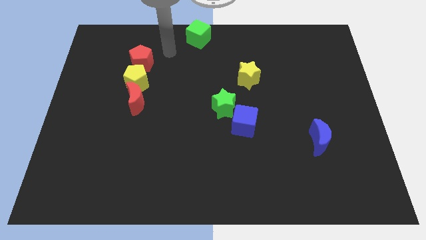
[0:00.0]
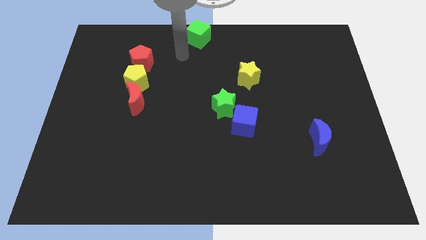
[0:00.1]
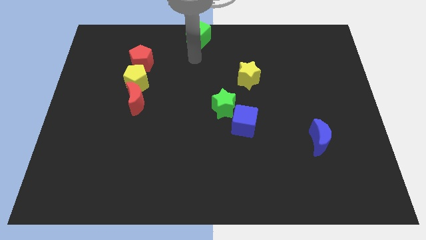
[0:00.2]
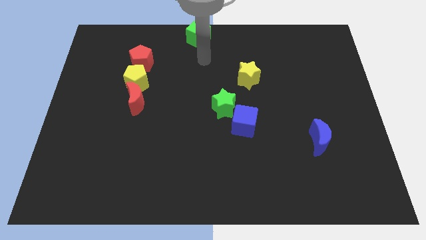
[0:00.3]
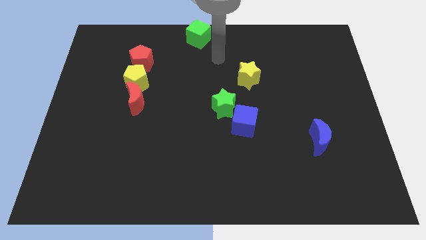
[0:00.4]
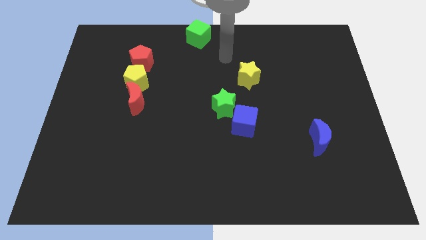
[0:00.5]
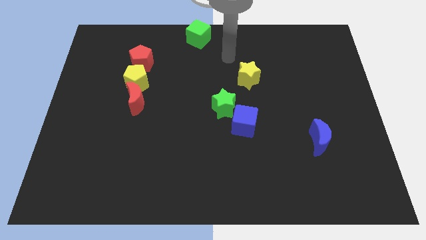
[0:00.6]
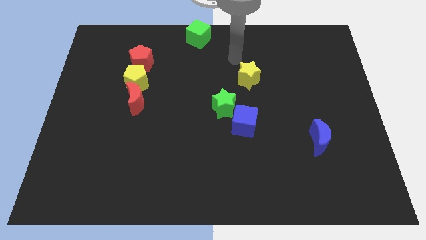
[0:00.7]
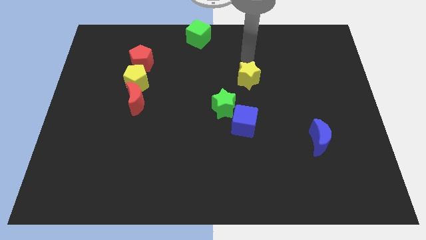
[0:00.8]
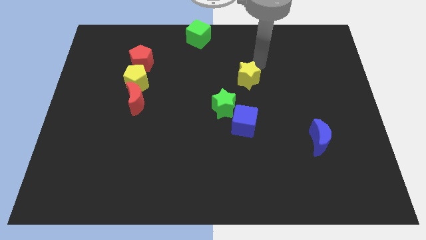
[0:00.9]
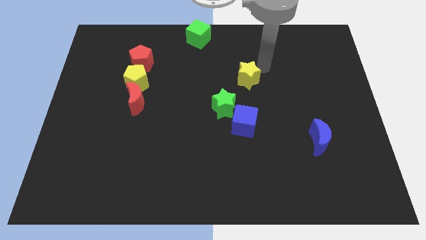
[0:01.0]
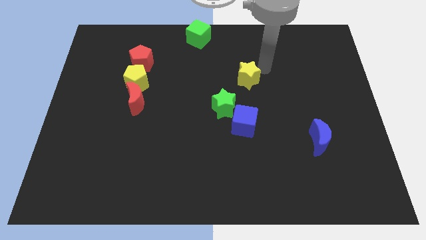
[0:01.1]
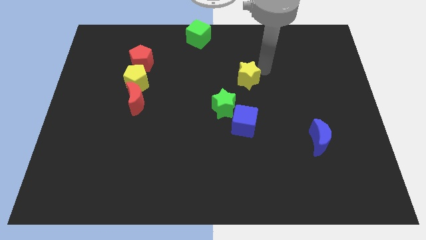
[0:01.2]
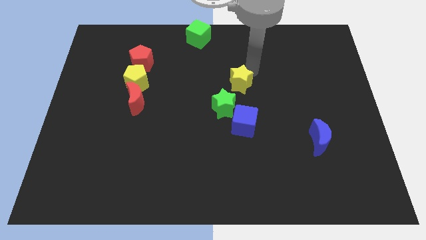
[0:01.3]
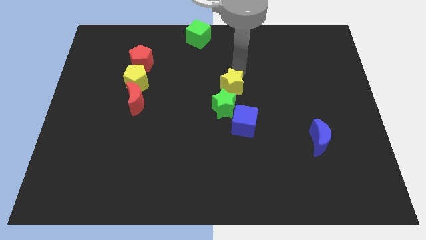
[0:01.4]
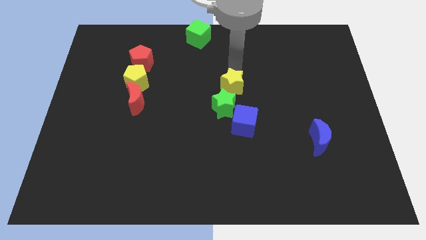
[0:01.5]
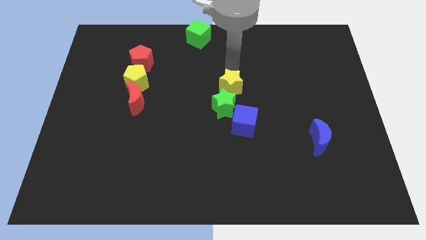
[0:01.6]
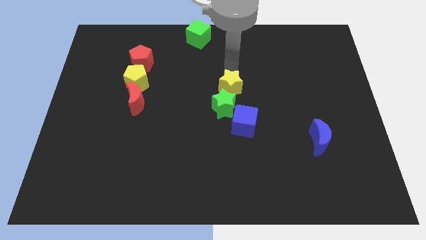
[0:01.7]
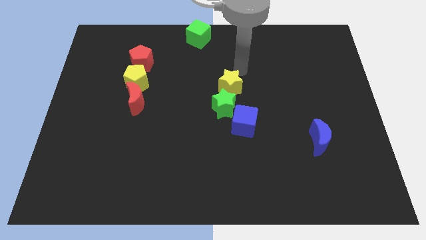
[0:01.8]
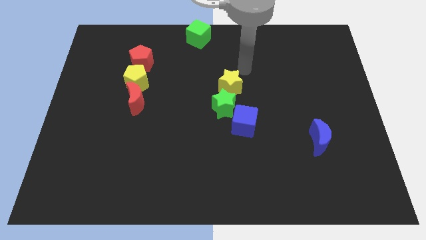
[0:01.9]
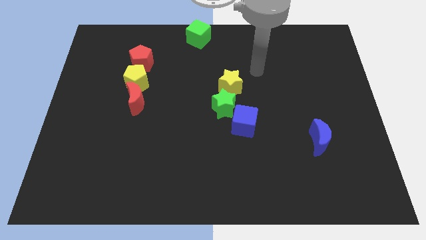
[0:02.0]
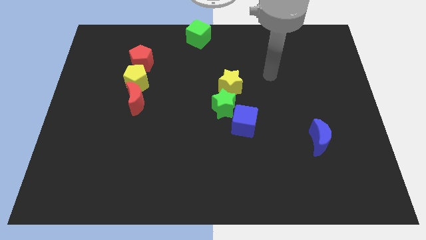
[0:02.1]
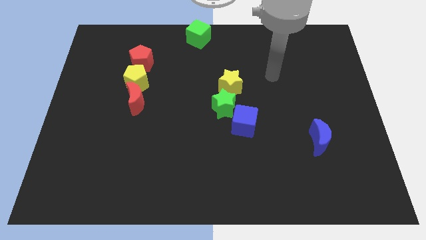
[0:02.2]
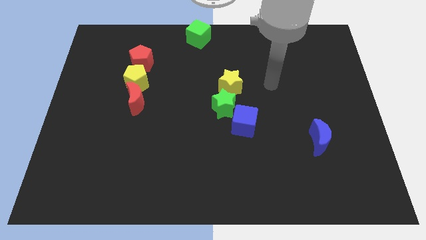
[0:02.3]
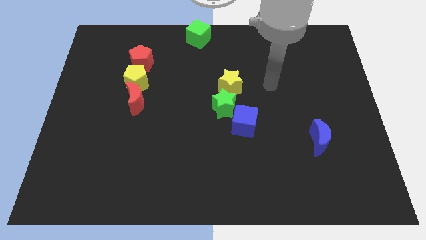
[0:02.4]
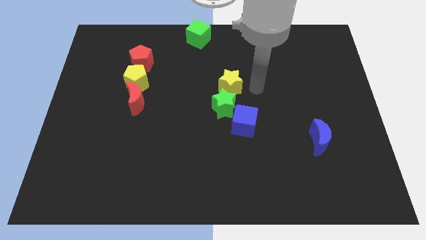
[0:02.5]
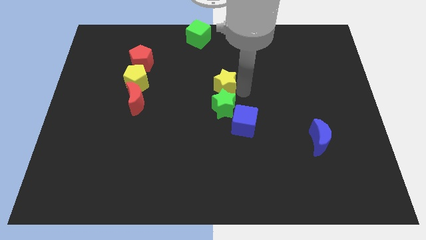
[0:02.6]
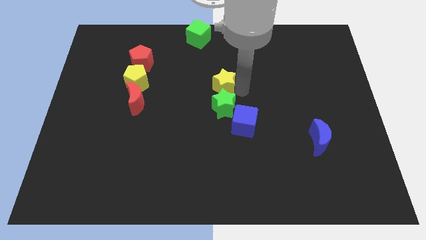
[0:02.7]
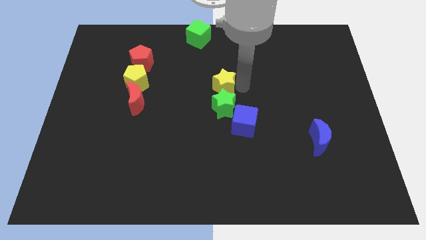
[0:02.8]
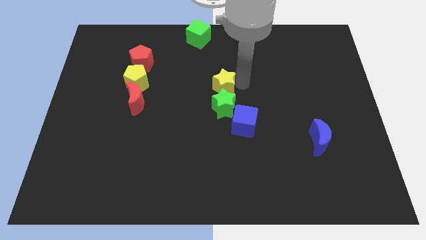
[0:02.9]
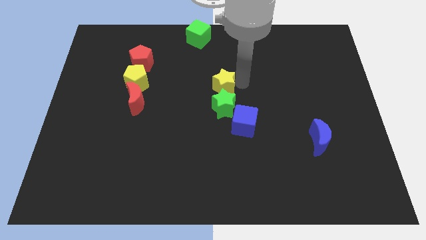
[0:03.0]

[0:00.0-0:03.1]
place the yellow star above the green star

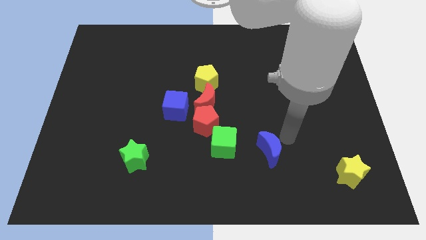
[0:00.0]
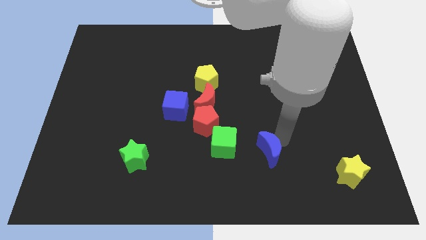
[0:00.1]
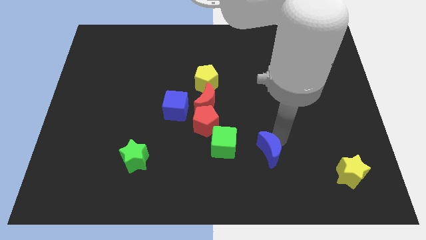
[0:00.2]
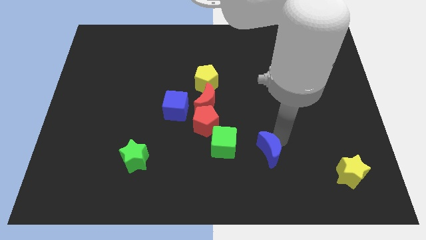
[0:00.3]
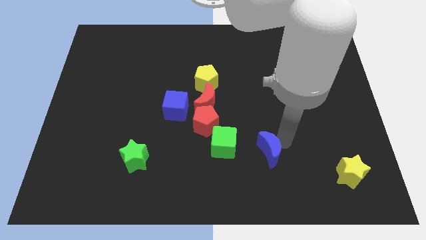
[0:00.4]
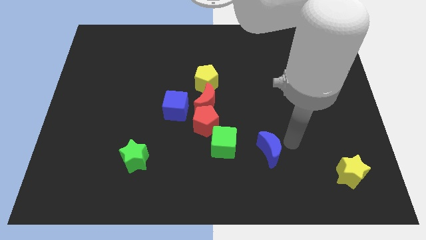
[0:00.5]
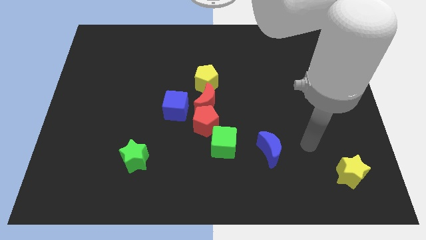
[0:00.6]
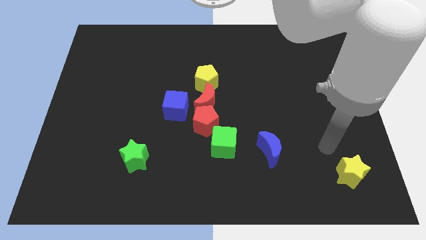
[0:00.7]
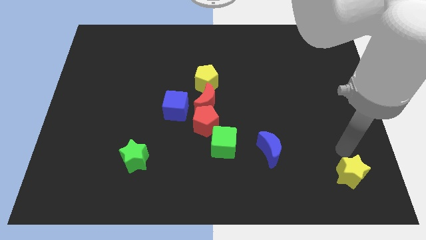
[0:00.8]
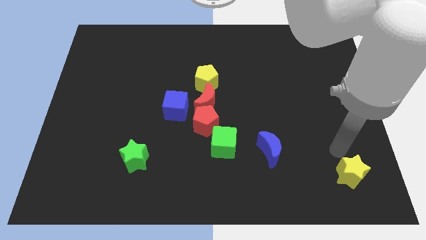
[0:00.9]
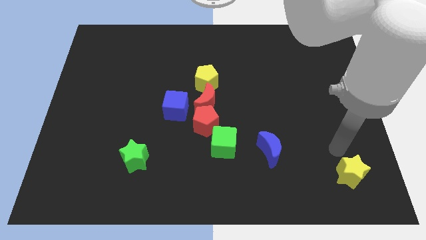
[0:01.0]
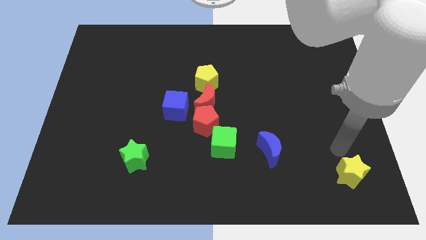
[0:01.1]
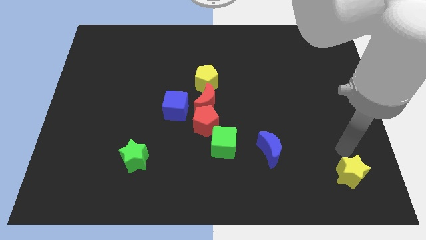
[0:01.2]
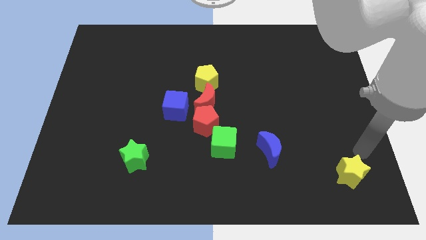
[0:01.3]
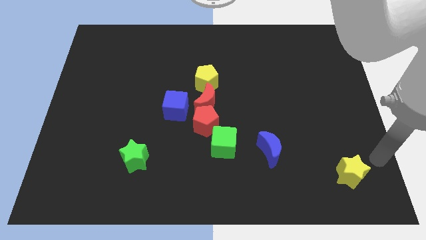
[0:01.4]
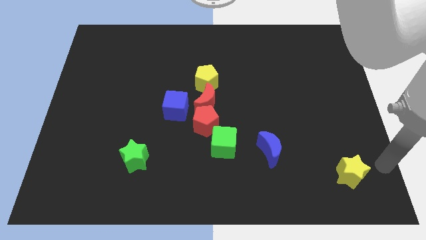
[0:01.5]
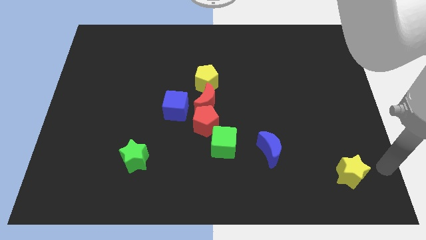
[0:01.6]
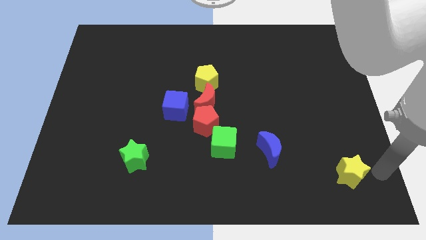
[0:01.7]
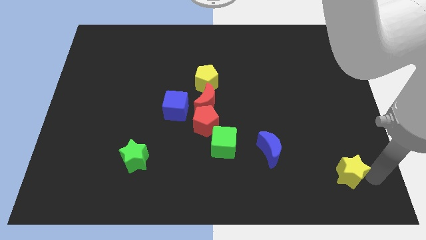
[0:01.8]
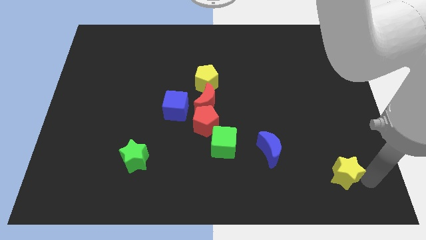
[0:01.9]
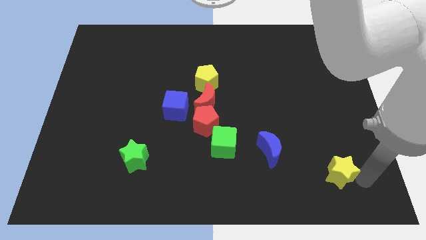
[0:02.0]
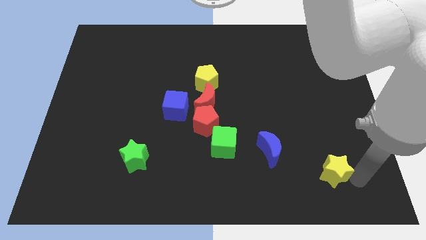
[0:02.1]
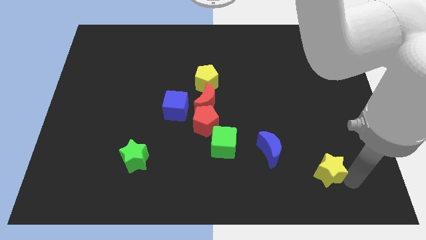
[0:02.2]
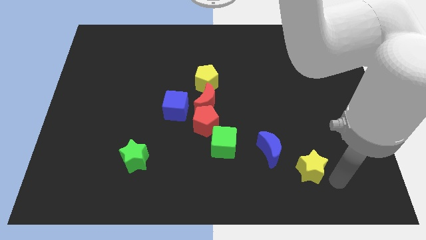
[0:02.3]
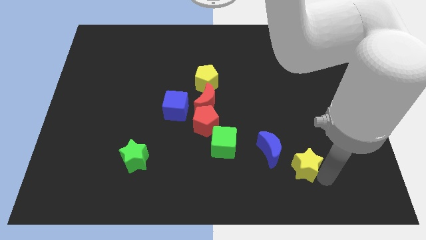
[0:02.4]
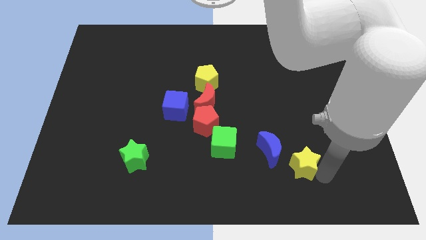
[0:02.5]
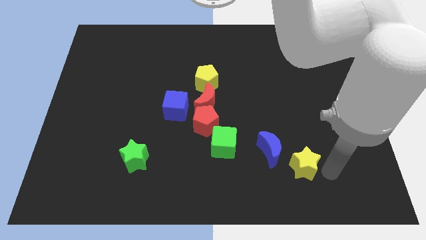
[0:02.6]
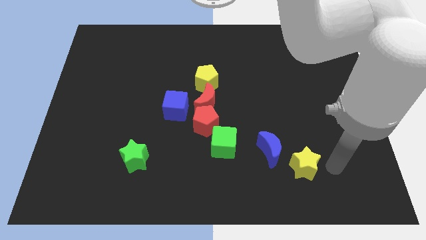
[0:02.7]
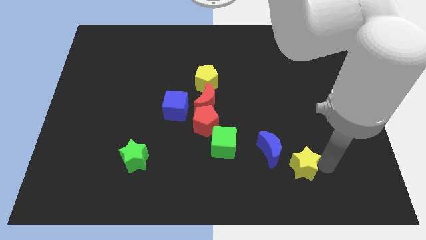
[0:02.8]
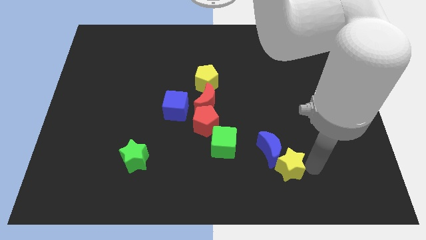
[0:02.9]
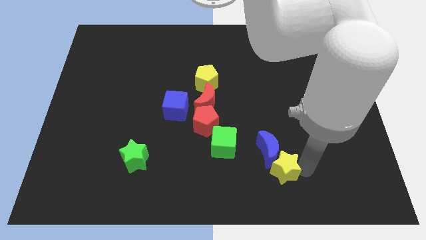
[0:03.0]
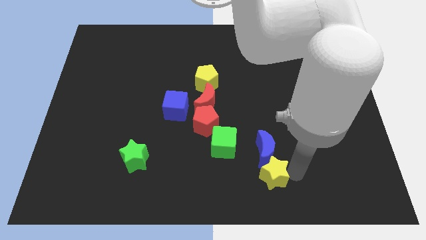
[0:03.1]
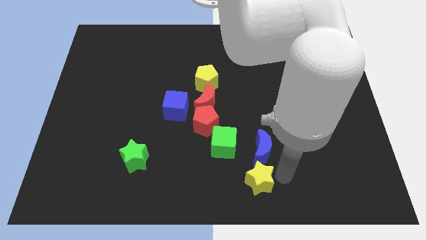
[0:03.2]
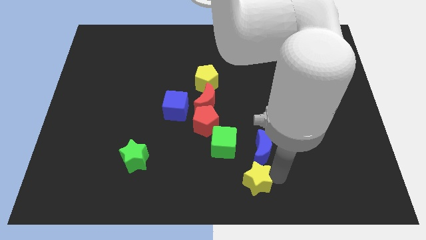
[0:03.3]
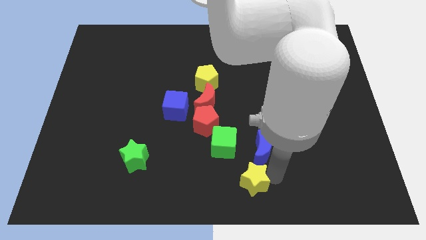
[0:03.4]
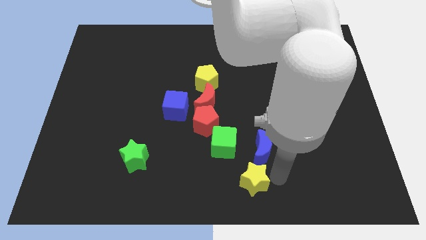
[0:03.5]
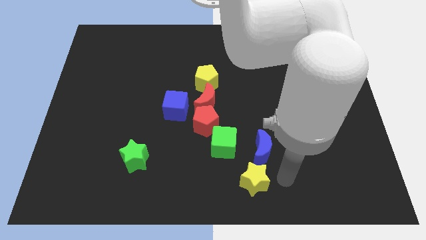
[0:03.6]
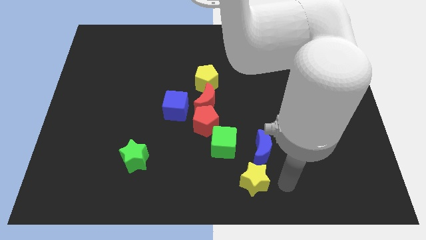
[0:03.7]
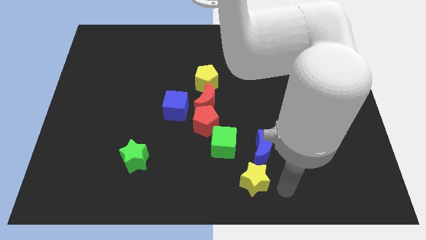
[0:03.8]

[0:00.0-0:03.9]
place the yellow star below the blue moon

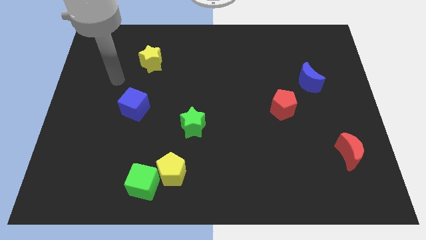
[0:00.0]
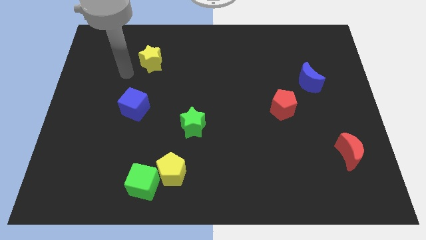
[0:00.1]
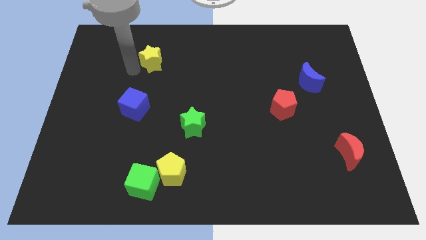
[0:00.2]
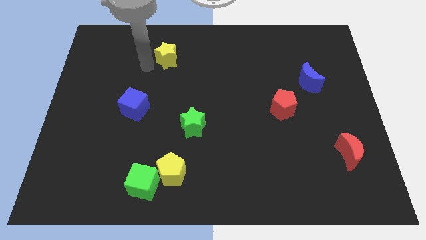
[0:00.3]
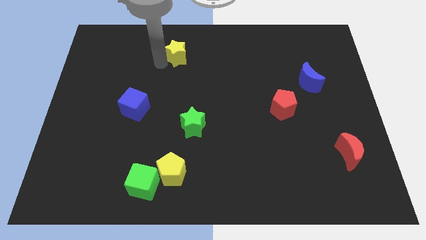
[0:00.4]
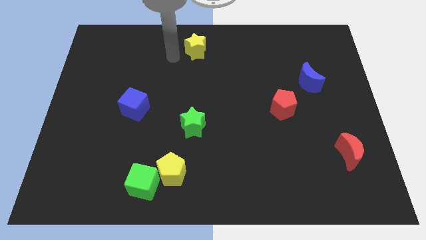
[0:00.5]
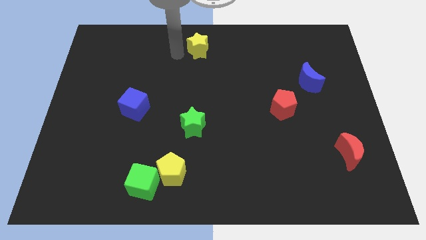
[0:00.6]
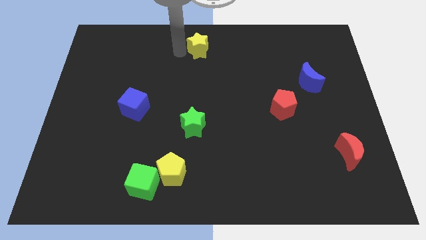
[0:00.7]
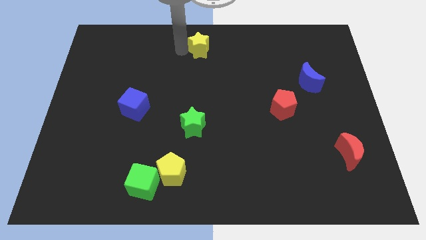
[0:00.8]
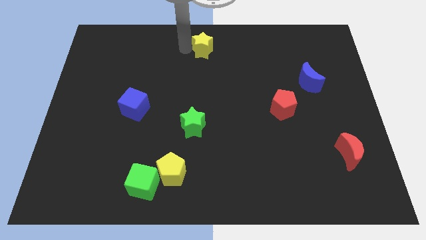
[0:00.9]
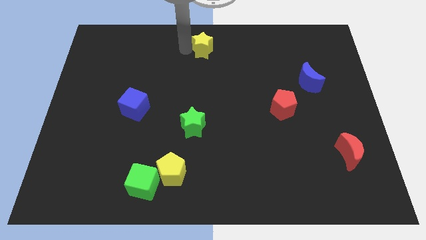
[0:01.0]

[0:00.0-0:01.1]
place the yellow star vertically above the green star

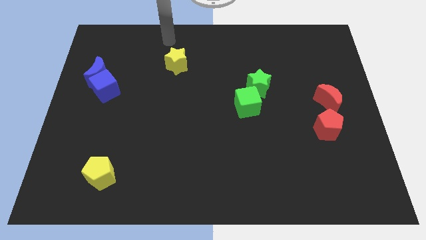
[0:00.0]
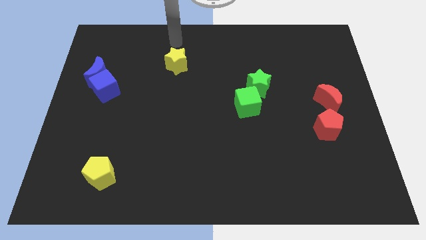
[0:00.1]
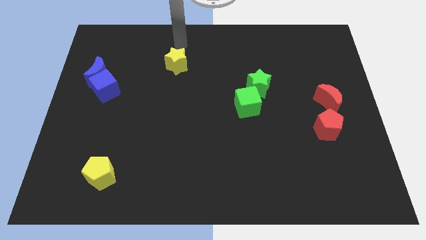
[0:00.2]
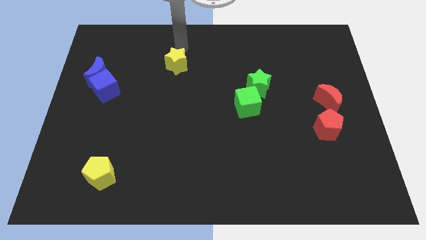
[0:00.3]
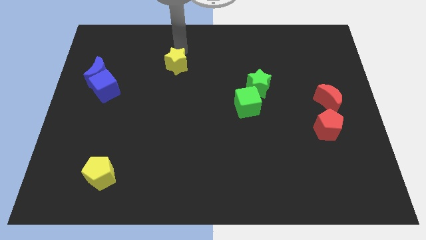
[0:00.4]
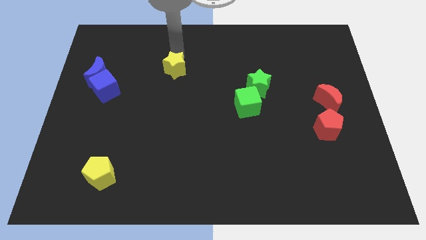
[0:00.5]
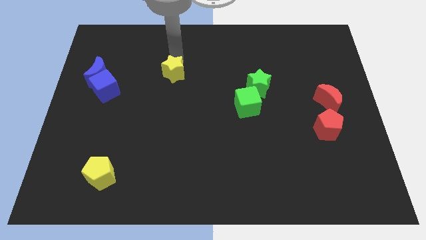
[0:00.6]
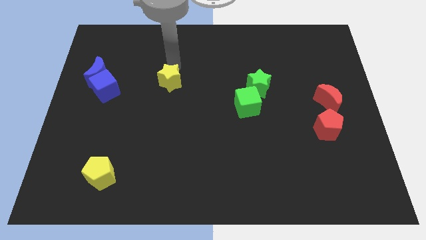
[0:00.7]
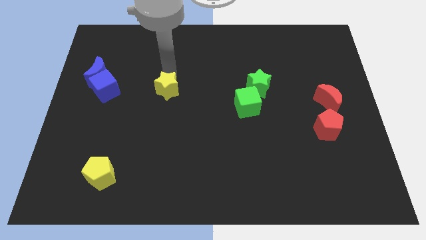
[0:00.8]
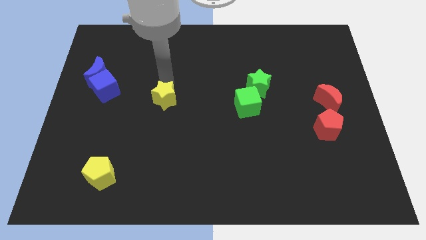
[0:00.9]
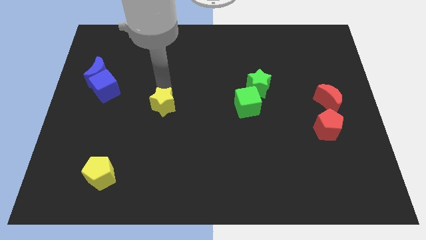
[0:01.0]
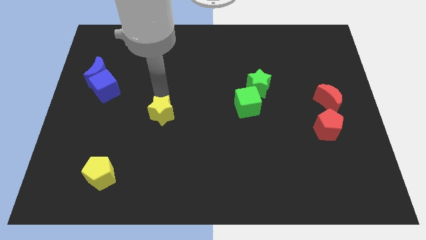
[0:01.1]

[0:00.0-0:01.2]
push yellow star towards the bottom side
